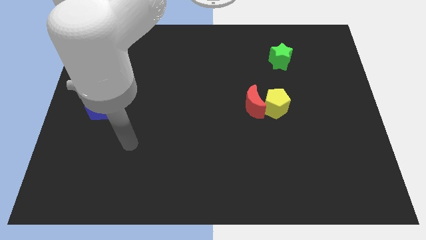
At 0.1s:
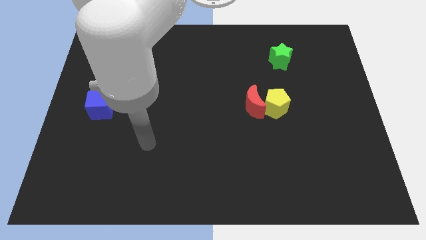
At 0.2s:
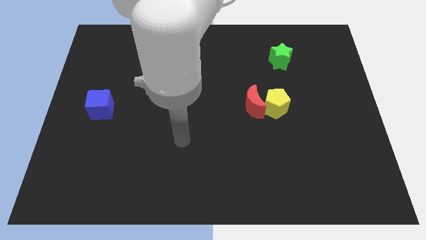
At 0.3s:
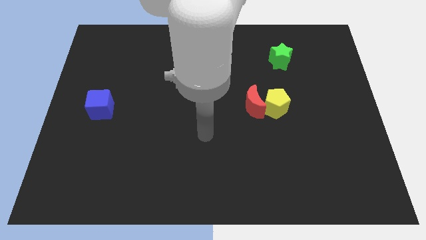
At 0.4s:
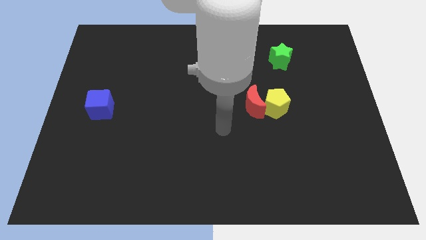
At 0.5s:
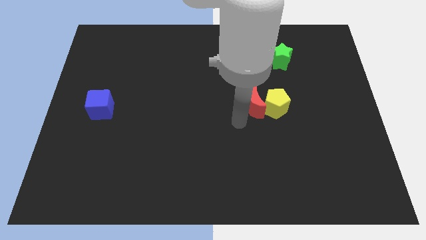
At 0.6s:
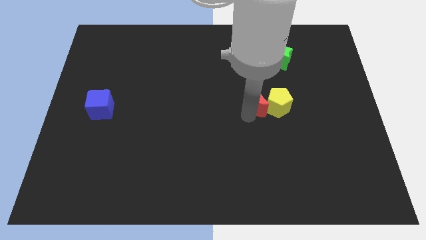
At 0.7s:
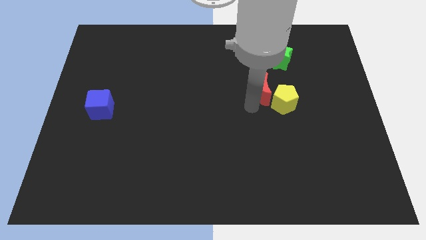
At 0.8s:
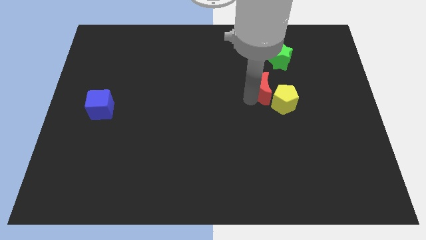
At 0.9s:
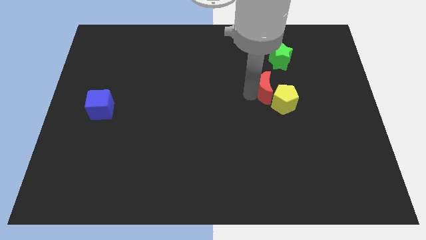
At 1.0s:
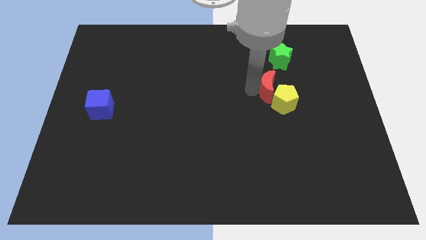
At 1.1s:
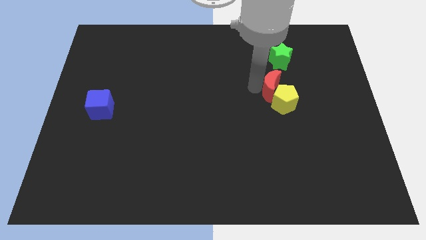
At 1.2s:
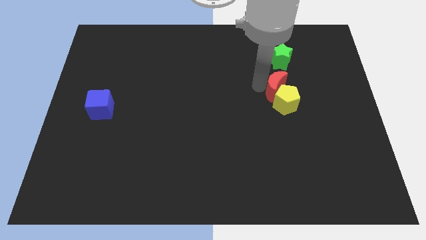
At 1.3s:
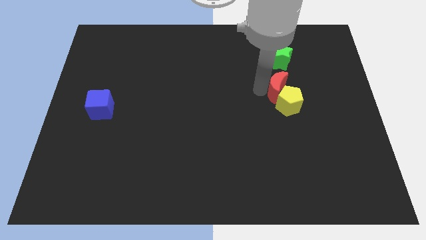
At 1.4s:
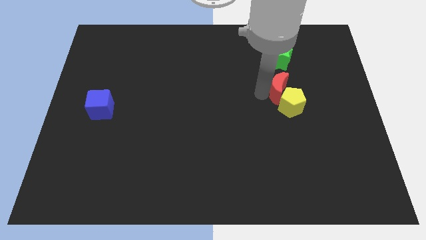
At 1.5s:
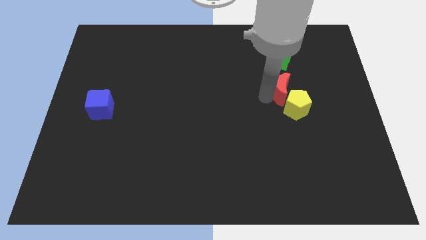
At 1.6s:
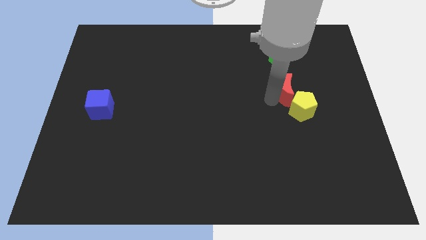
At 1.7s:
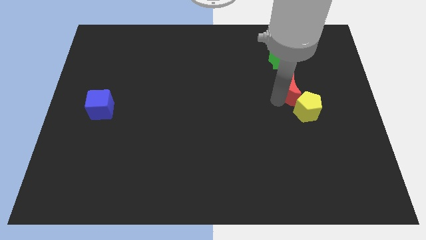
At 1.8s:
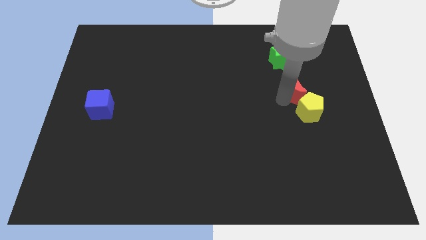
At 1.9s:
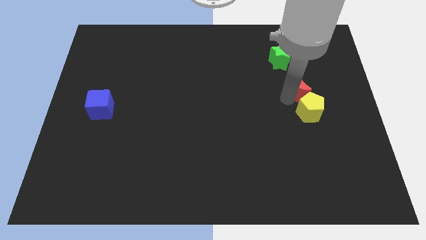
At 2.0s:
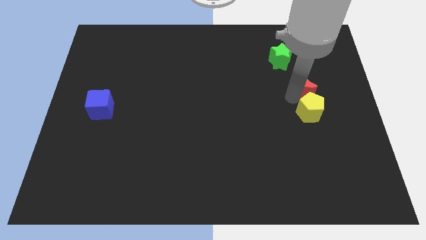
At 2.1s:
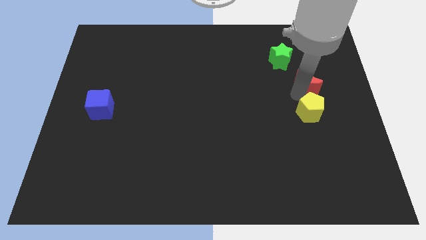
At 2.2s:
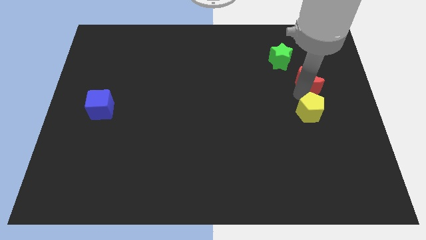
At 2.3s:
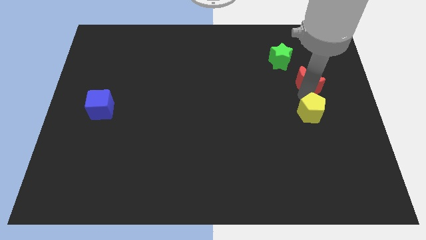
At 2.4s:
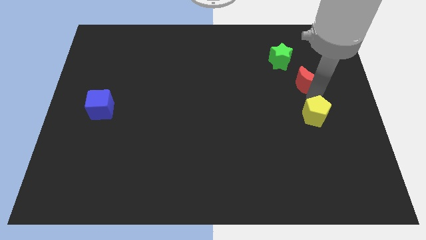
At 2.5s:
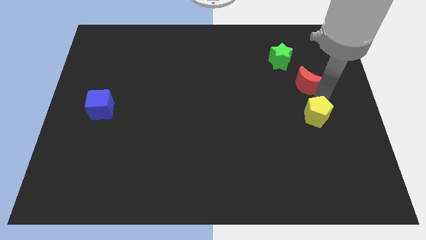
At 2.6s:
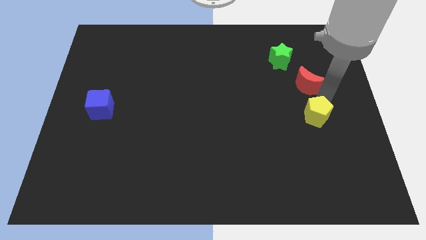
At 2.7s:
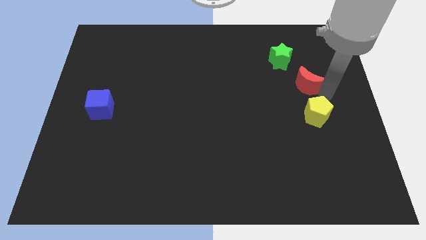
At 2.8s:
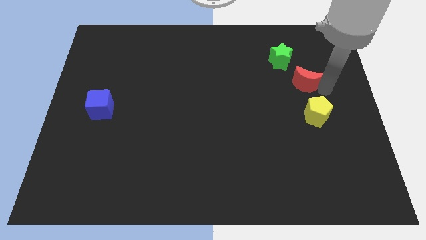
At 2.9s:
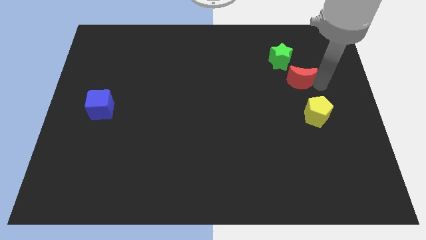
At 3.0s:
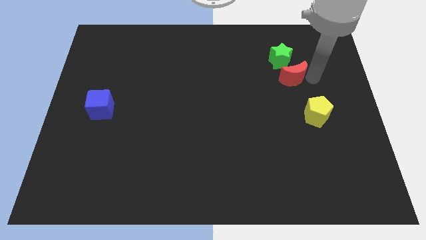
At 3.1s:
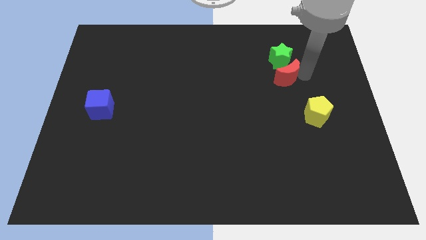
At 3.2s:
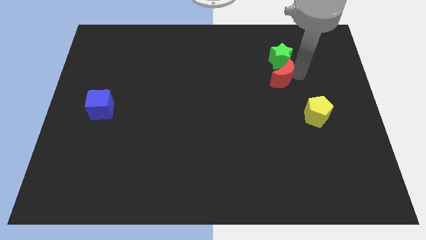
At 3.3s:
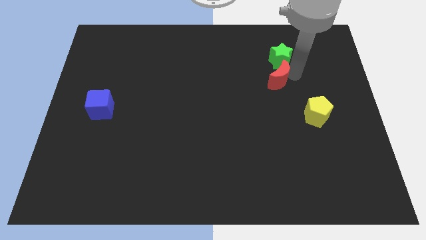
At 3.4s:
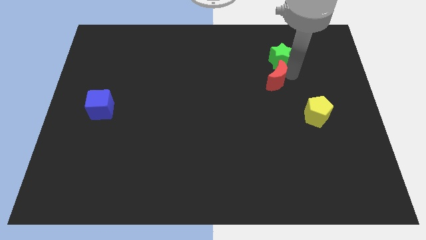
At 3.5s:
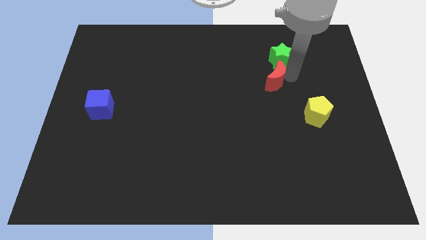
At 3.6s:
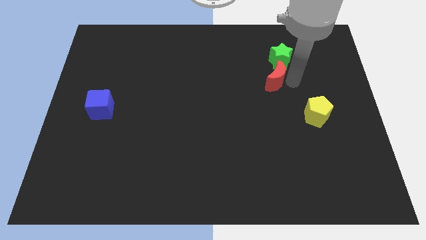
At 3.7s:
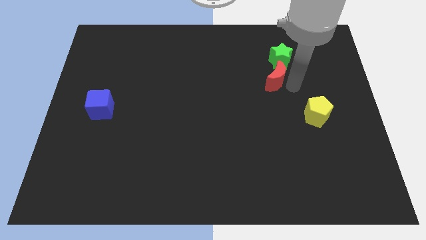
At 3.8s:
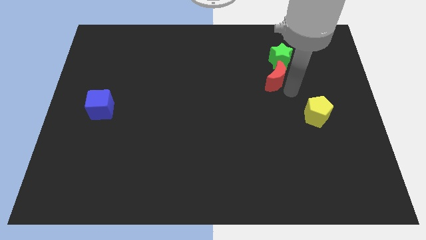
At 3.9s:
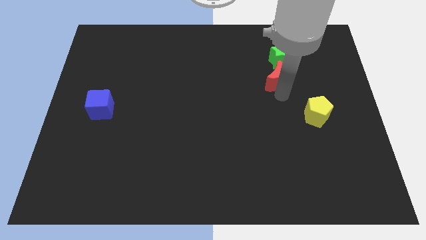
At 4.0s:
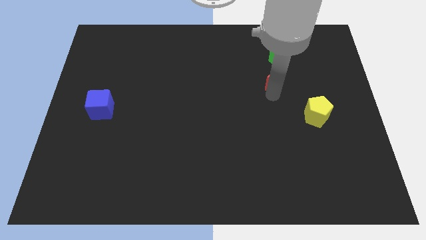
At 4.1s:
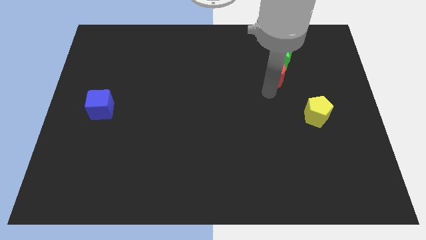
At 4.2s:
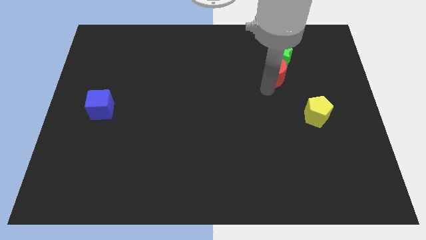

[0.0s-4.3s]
slide the moon to the green star

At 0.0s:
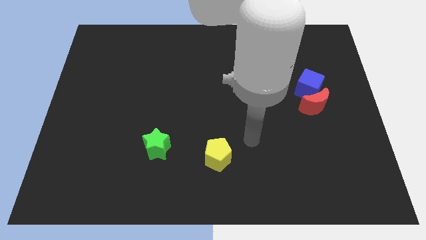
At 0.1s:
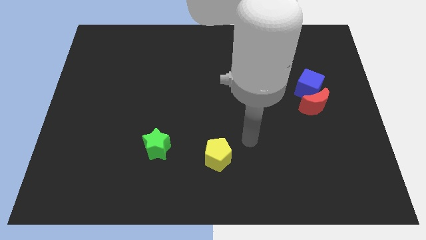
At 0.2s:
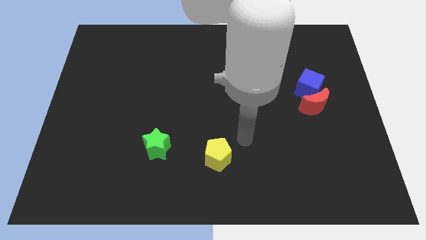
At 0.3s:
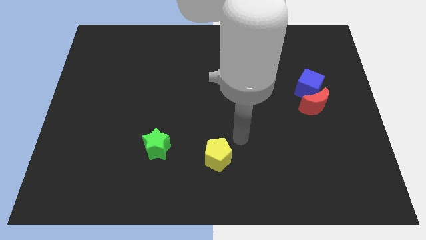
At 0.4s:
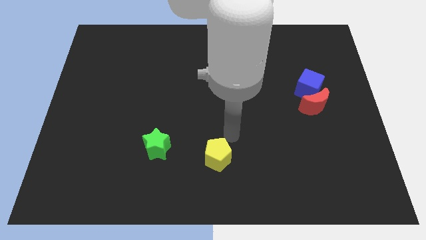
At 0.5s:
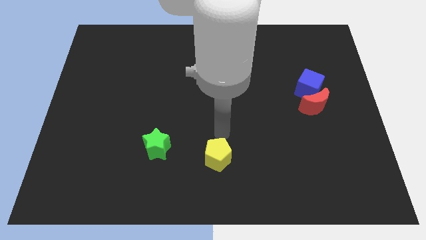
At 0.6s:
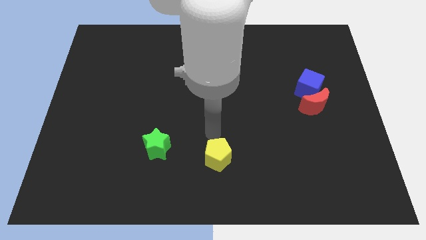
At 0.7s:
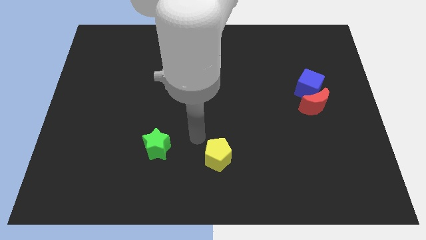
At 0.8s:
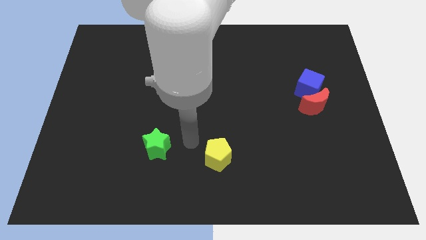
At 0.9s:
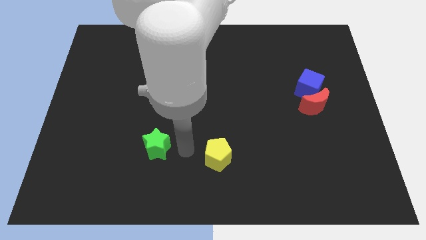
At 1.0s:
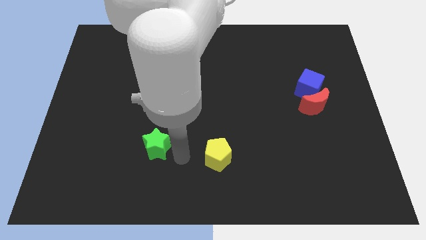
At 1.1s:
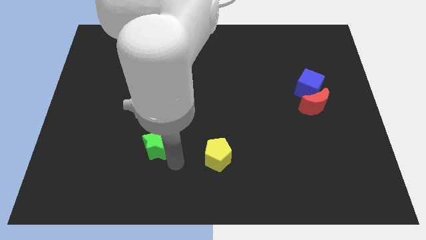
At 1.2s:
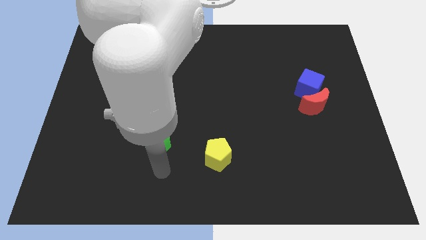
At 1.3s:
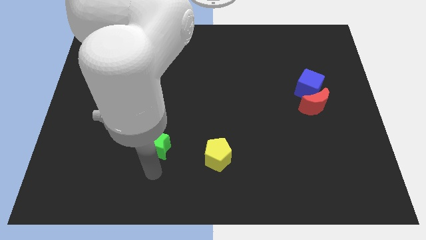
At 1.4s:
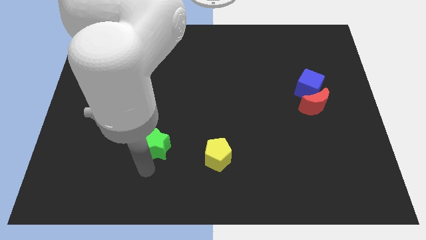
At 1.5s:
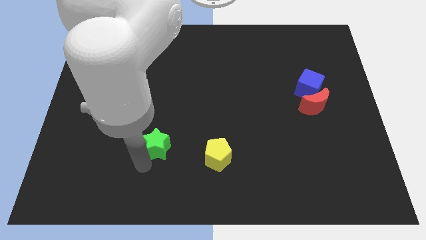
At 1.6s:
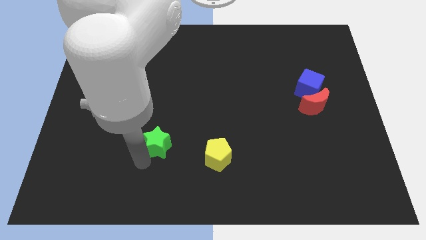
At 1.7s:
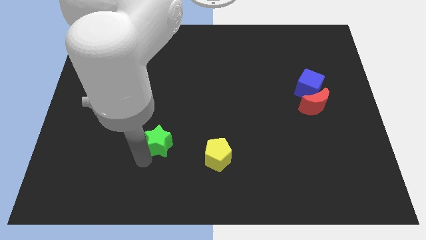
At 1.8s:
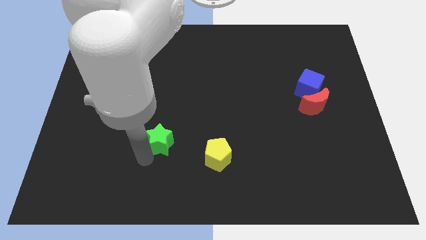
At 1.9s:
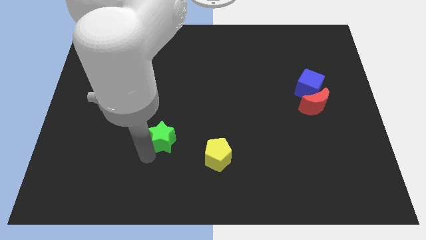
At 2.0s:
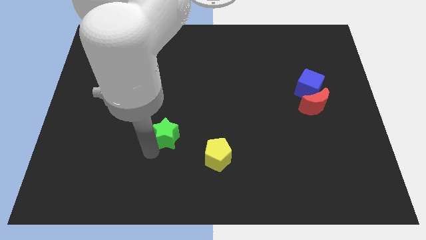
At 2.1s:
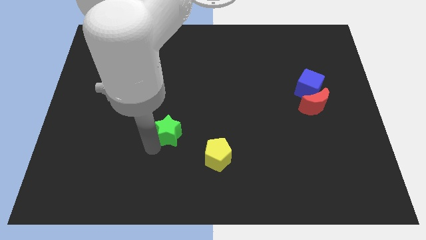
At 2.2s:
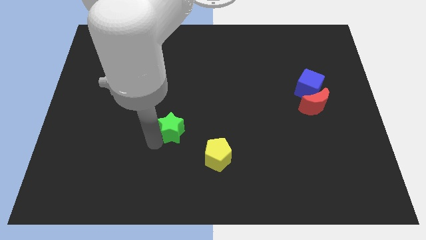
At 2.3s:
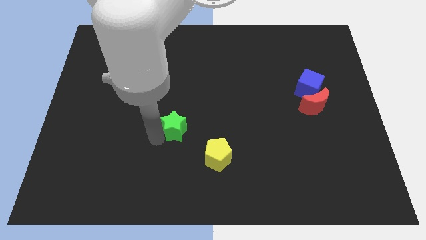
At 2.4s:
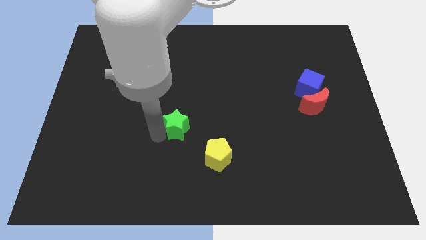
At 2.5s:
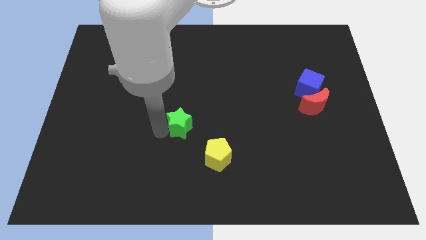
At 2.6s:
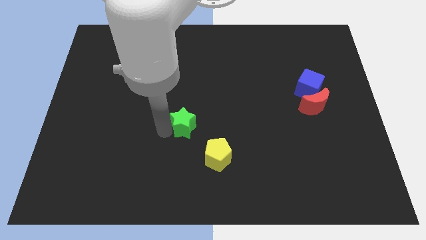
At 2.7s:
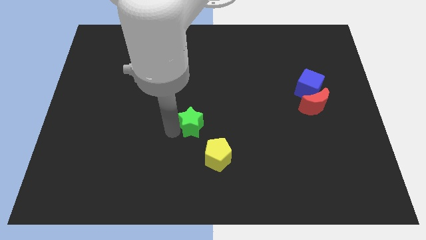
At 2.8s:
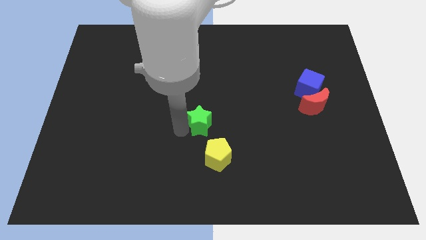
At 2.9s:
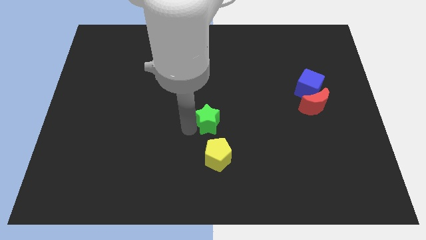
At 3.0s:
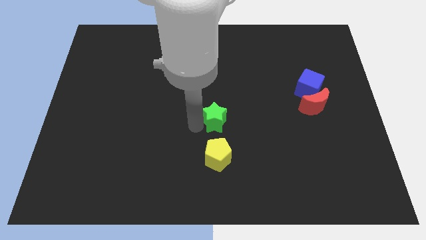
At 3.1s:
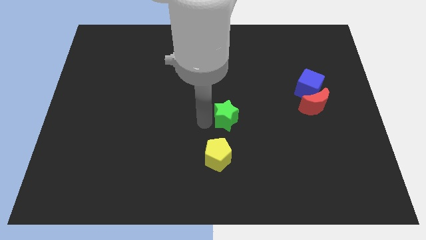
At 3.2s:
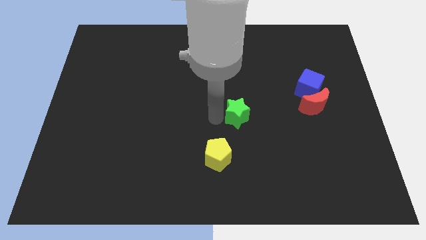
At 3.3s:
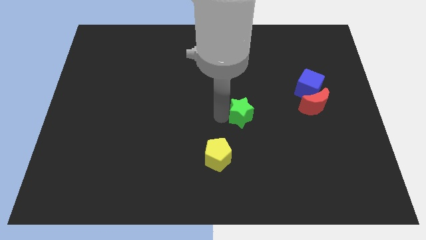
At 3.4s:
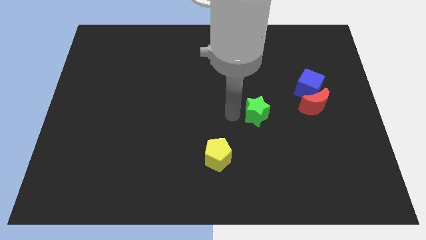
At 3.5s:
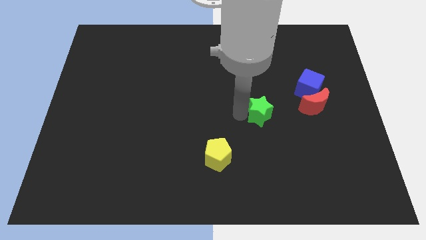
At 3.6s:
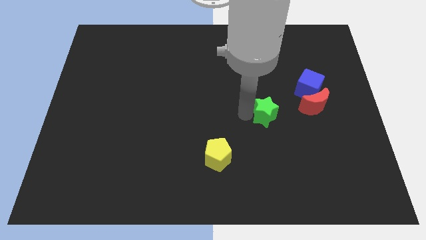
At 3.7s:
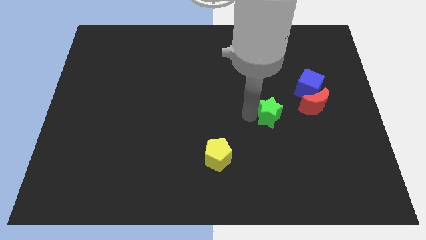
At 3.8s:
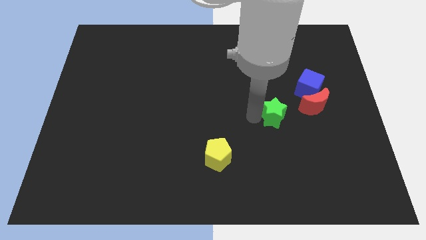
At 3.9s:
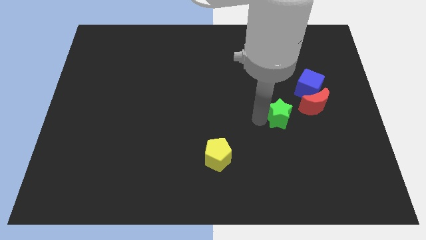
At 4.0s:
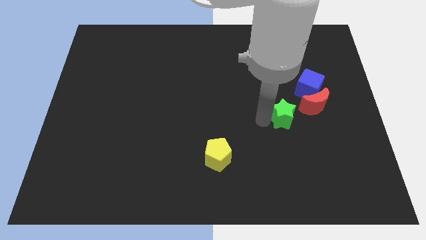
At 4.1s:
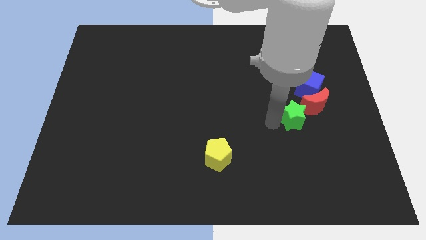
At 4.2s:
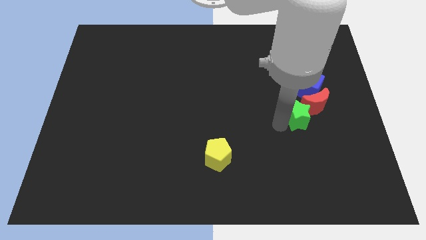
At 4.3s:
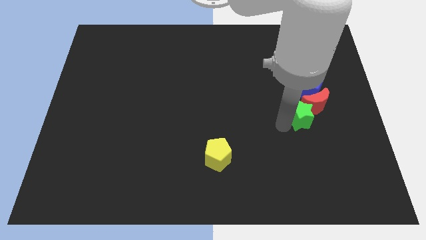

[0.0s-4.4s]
put the green star towards the moon
